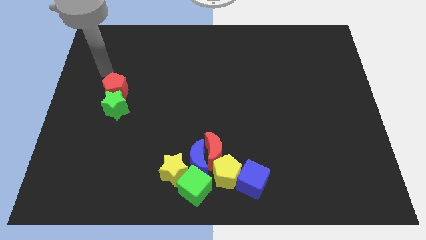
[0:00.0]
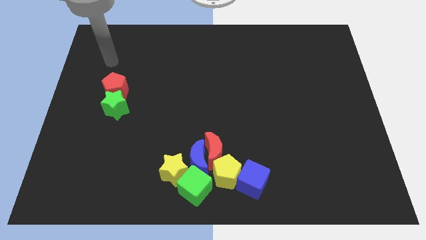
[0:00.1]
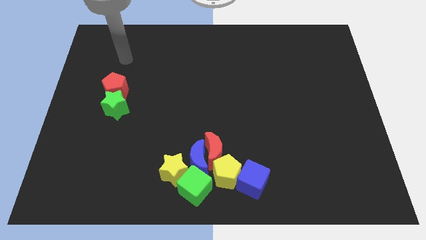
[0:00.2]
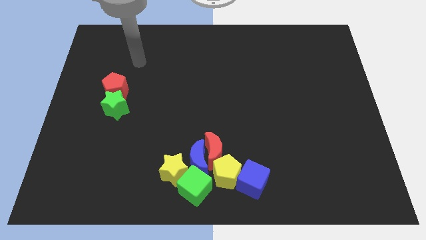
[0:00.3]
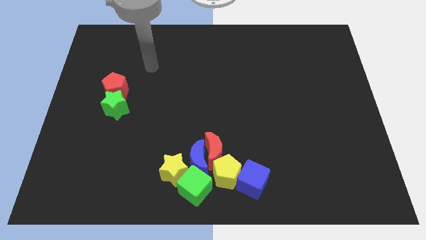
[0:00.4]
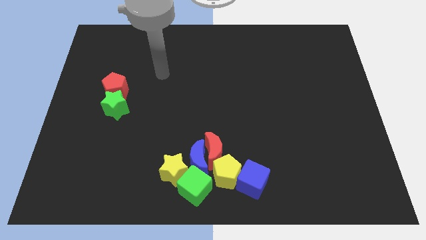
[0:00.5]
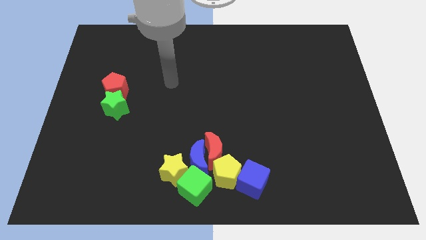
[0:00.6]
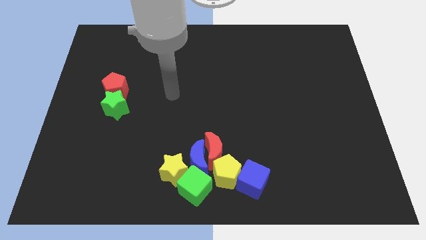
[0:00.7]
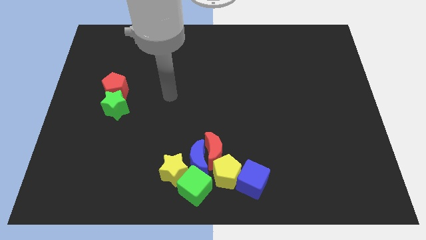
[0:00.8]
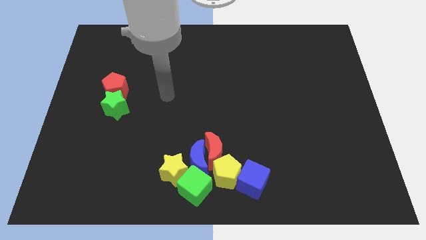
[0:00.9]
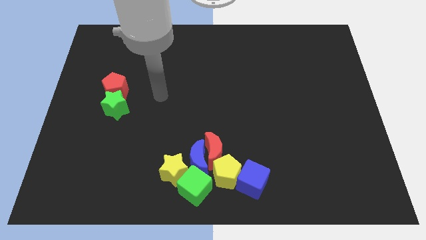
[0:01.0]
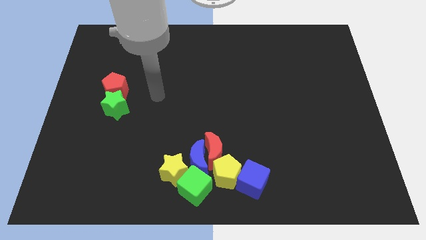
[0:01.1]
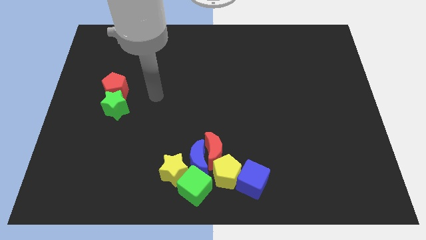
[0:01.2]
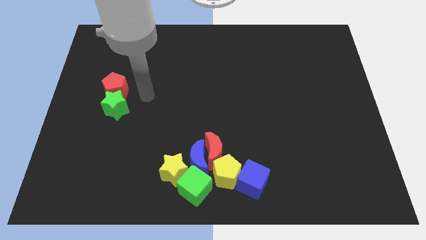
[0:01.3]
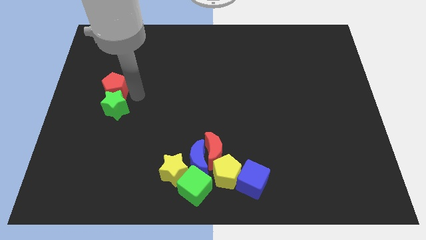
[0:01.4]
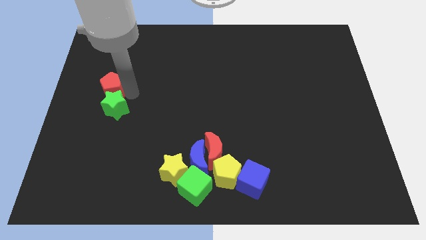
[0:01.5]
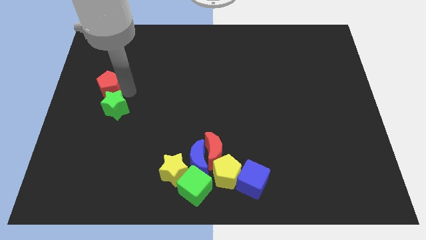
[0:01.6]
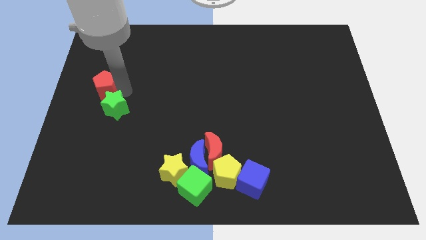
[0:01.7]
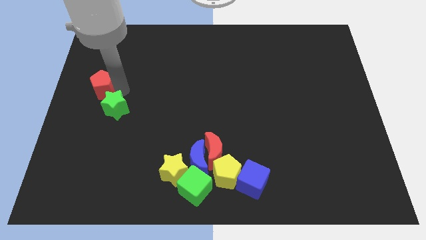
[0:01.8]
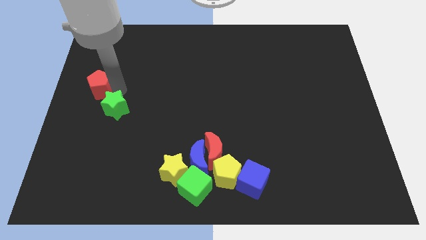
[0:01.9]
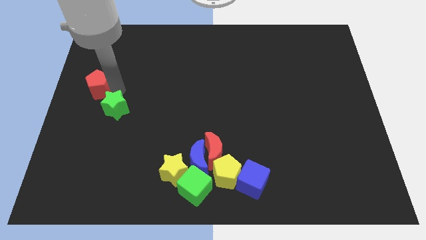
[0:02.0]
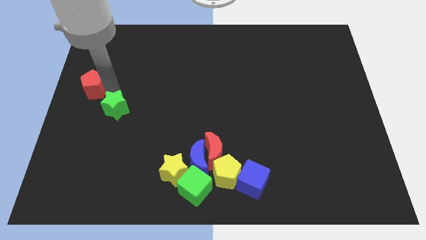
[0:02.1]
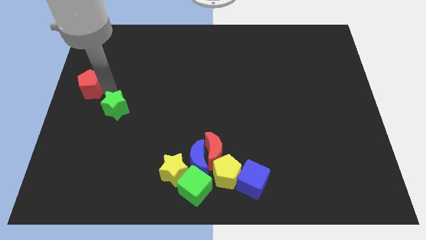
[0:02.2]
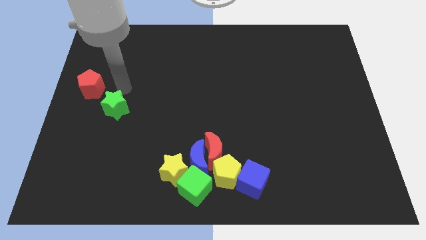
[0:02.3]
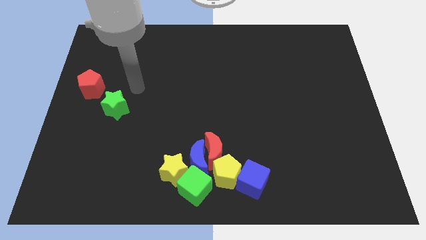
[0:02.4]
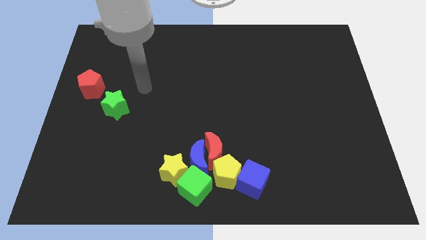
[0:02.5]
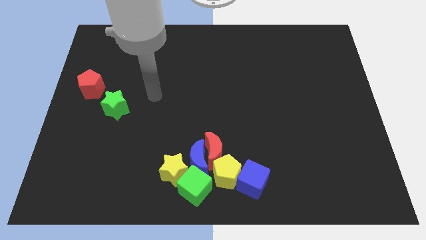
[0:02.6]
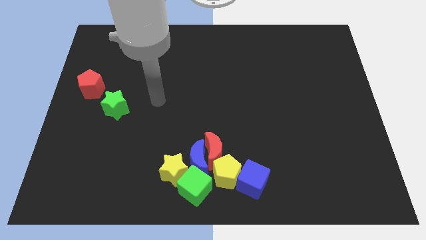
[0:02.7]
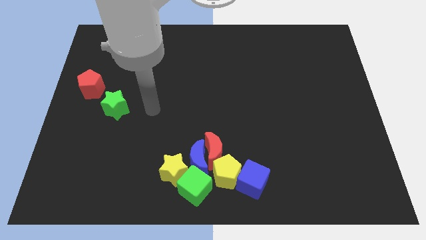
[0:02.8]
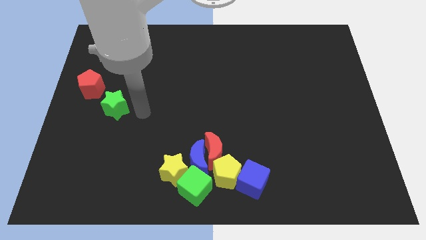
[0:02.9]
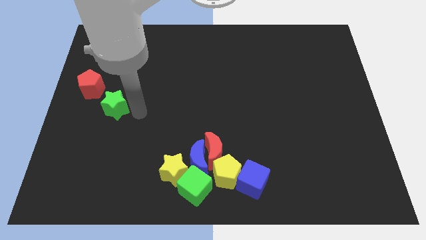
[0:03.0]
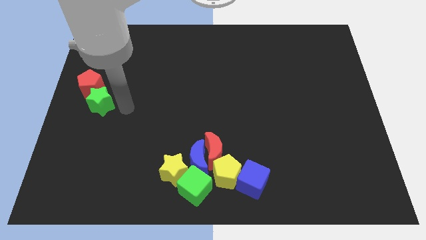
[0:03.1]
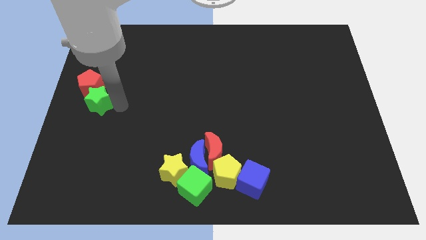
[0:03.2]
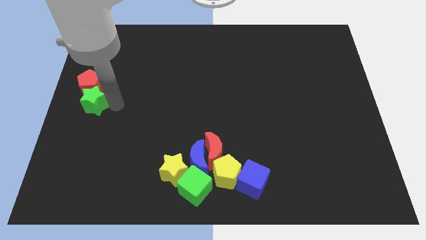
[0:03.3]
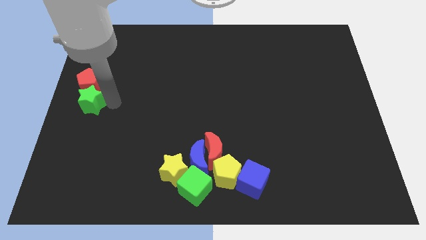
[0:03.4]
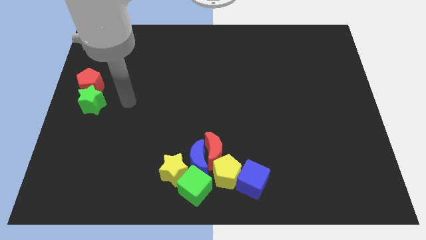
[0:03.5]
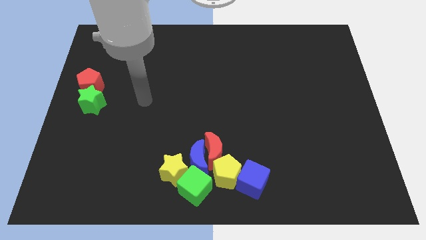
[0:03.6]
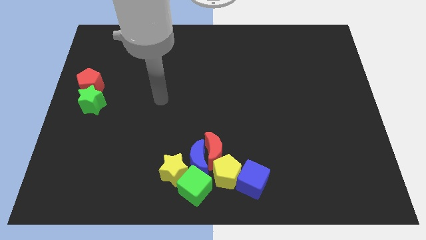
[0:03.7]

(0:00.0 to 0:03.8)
move the red pentagon along with green star to the left center of the board

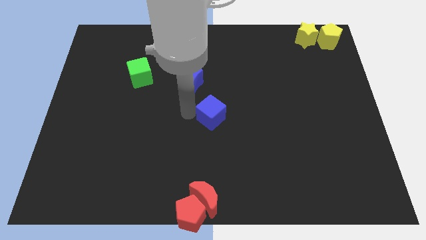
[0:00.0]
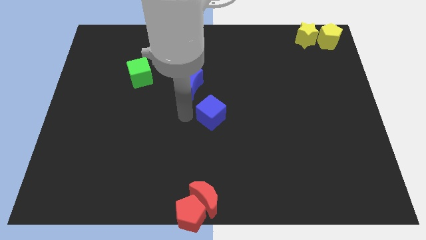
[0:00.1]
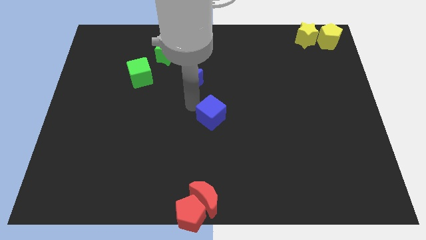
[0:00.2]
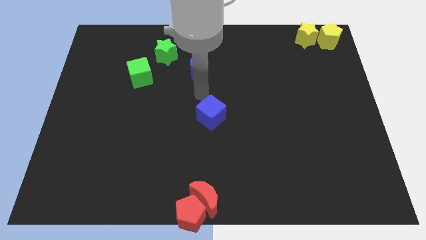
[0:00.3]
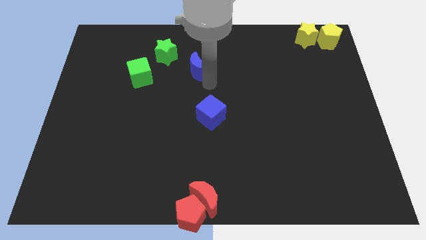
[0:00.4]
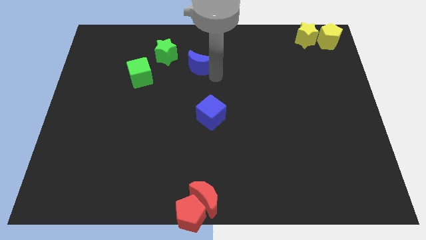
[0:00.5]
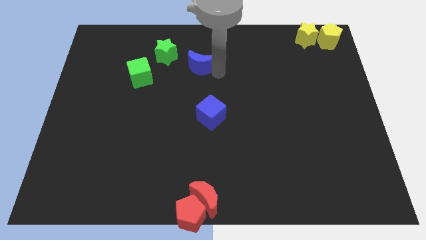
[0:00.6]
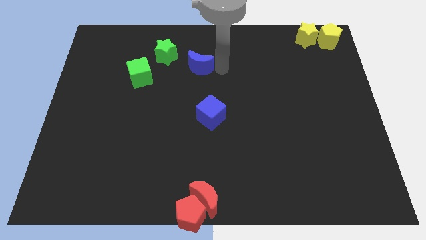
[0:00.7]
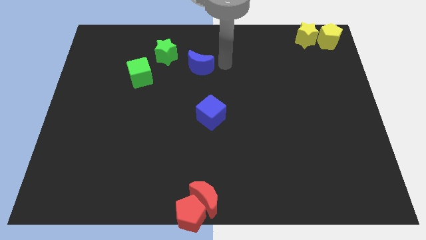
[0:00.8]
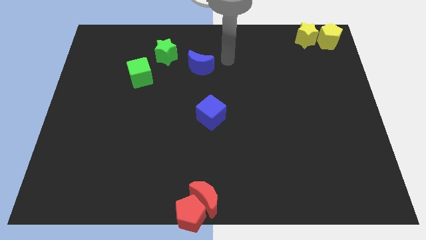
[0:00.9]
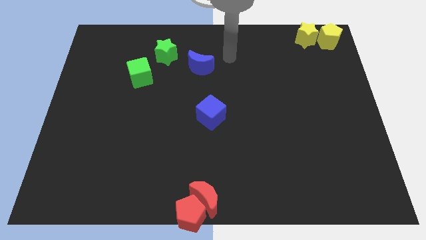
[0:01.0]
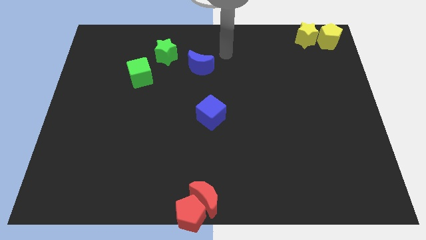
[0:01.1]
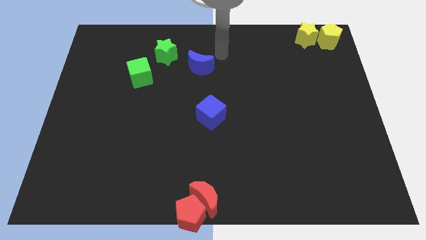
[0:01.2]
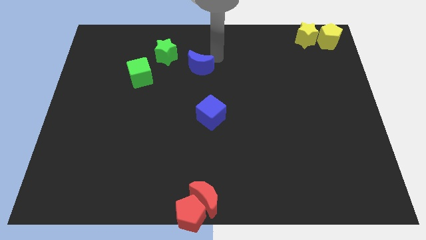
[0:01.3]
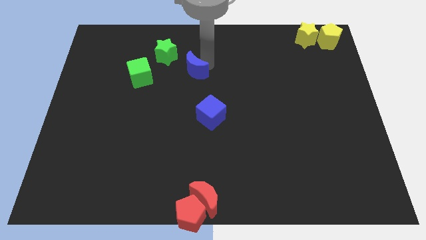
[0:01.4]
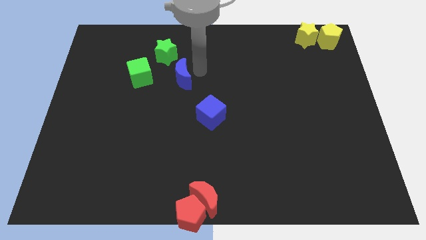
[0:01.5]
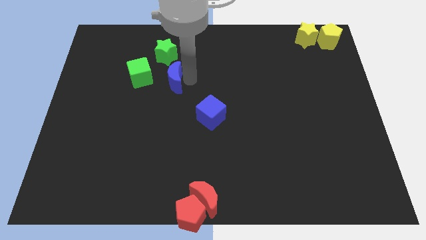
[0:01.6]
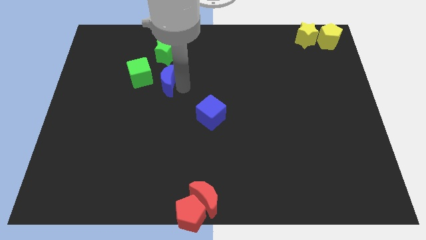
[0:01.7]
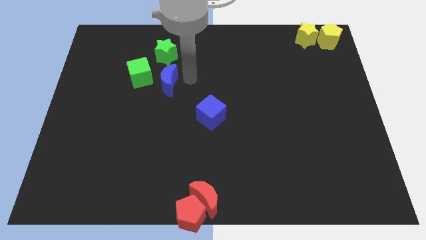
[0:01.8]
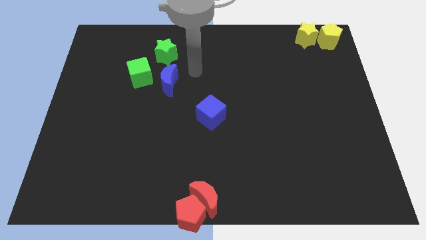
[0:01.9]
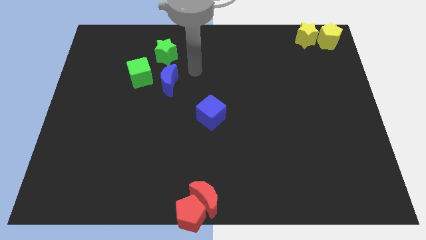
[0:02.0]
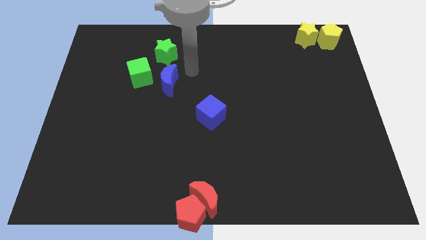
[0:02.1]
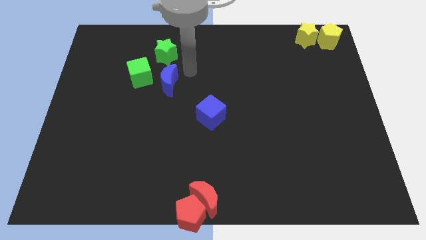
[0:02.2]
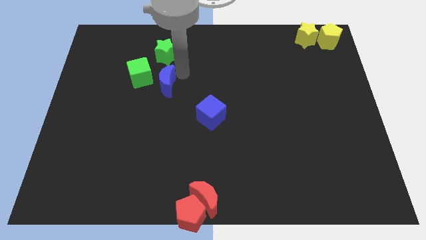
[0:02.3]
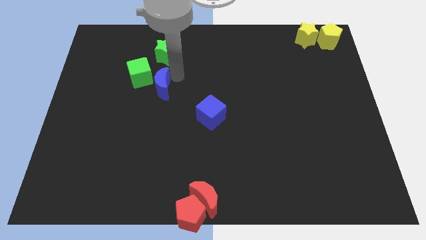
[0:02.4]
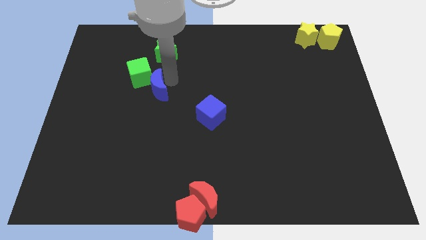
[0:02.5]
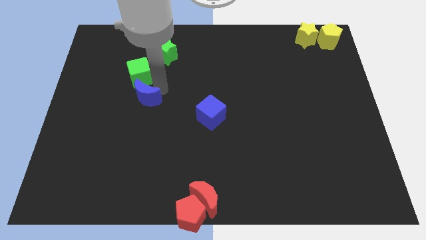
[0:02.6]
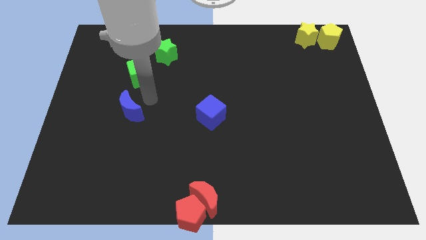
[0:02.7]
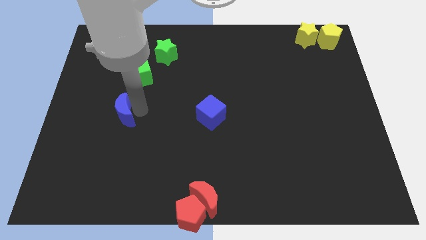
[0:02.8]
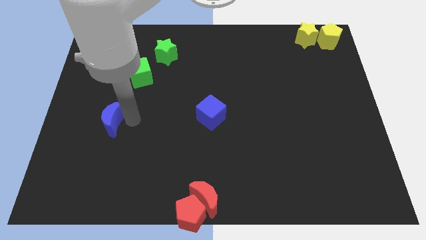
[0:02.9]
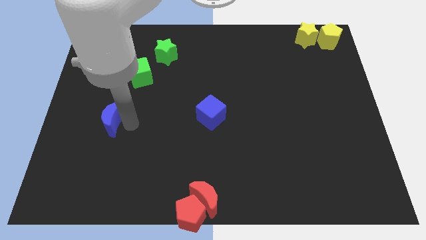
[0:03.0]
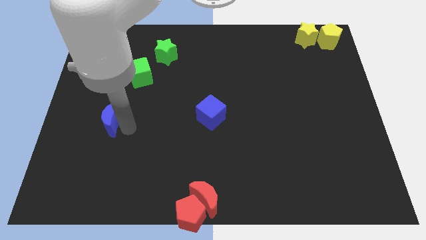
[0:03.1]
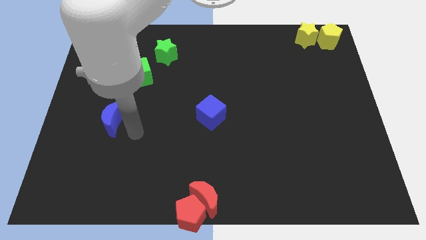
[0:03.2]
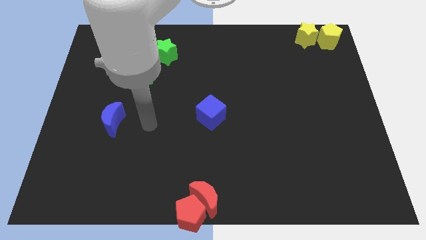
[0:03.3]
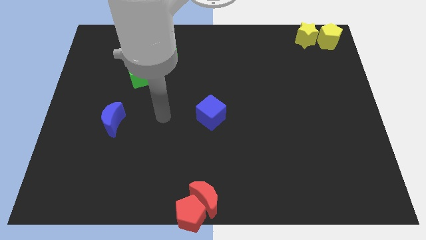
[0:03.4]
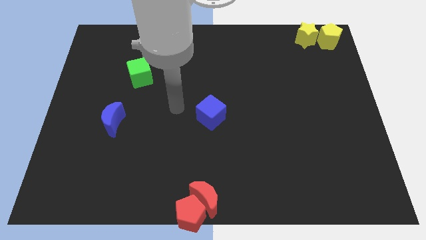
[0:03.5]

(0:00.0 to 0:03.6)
place the blue moon to the horizontal left side of the blue cube

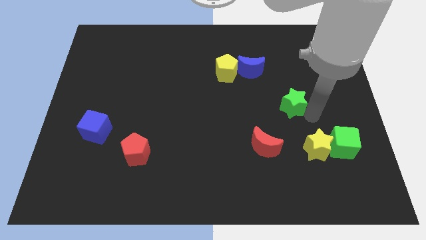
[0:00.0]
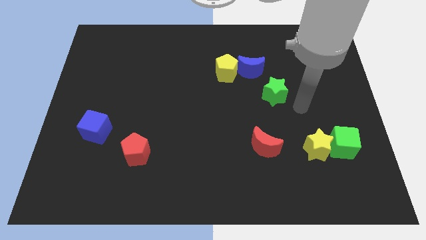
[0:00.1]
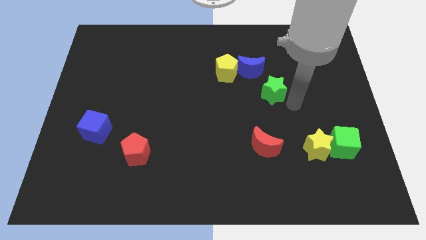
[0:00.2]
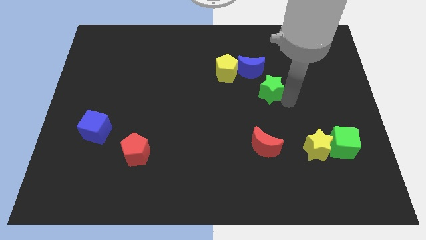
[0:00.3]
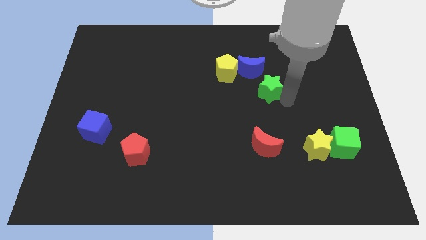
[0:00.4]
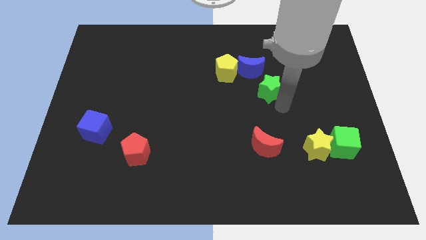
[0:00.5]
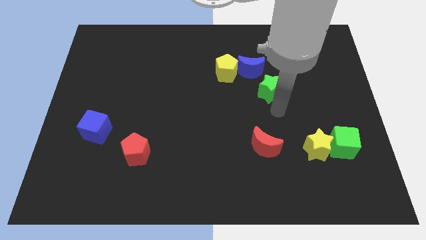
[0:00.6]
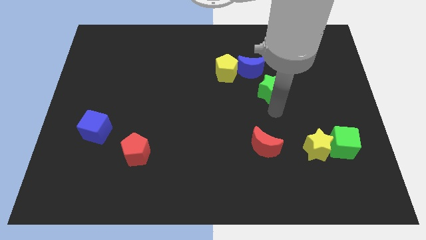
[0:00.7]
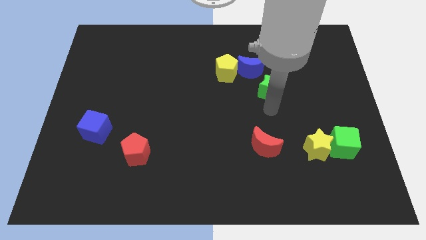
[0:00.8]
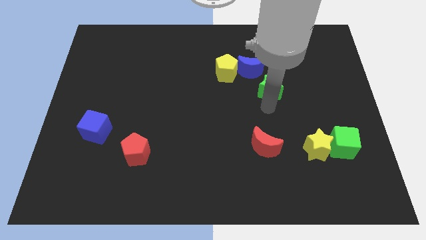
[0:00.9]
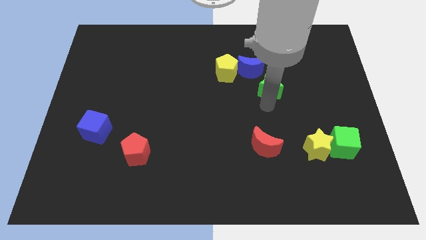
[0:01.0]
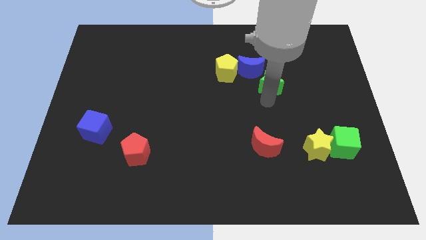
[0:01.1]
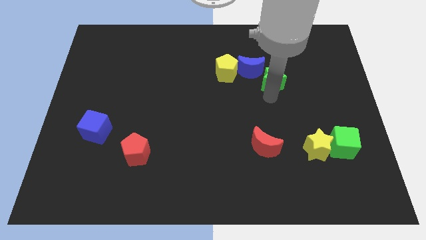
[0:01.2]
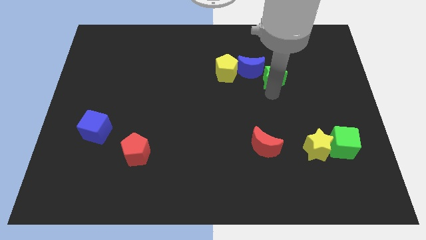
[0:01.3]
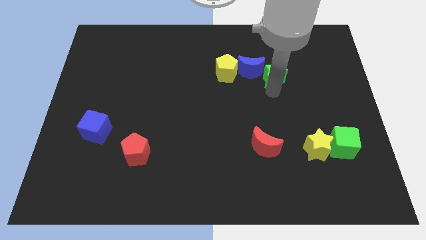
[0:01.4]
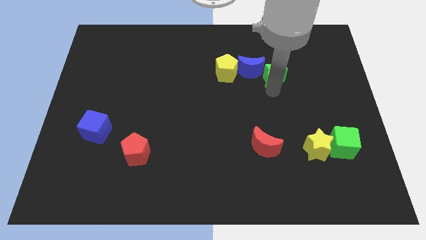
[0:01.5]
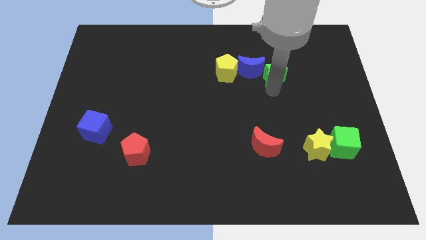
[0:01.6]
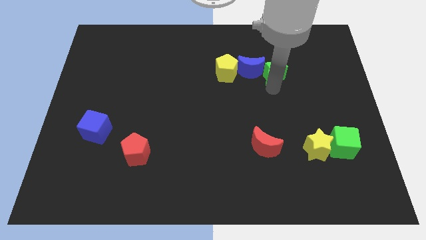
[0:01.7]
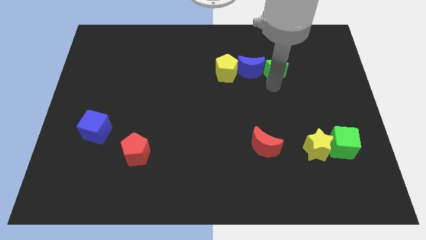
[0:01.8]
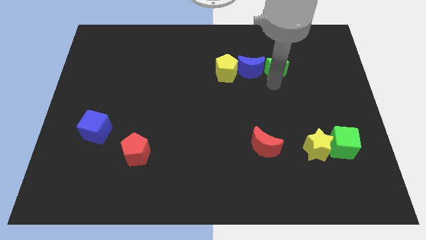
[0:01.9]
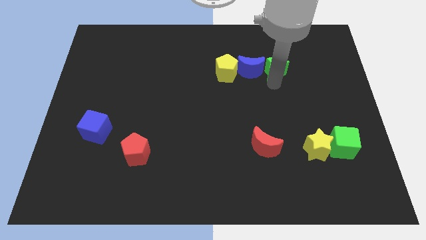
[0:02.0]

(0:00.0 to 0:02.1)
place the green star to the right of the blue moon
